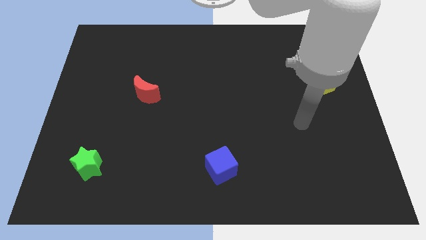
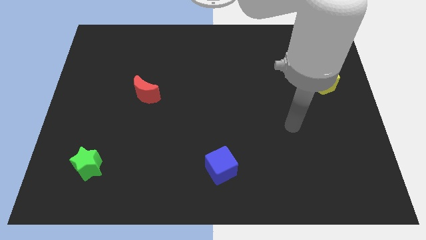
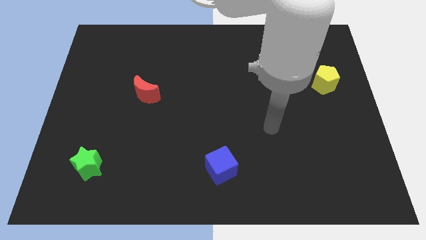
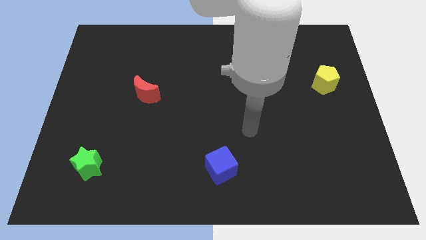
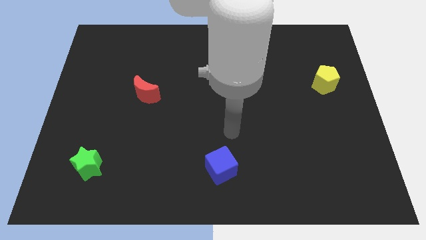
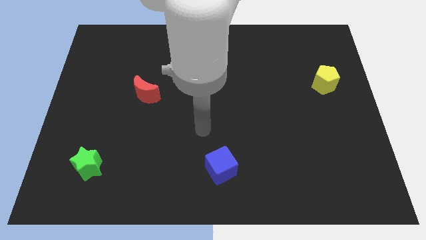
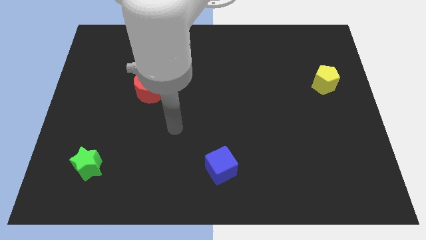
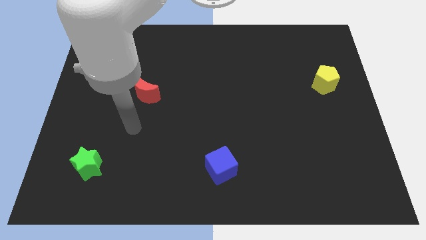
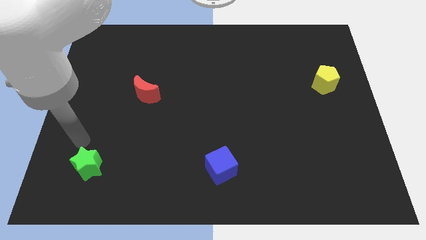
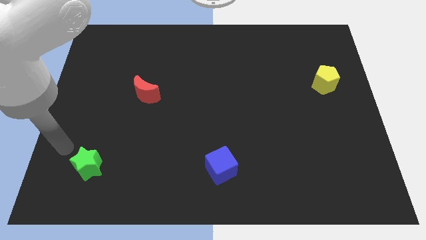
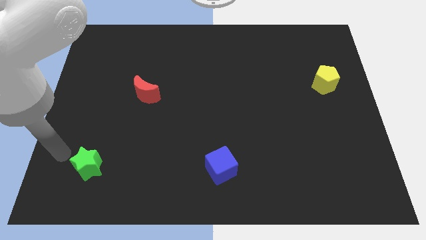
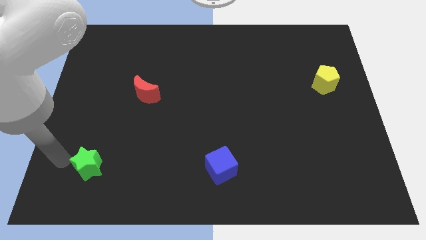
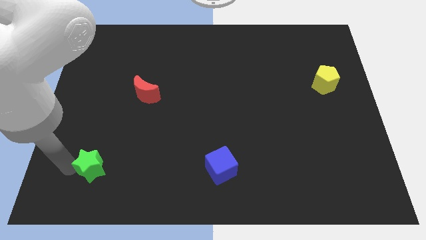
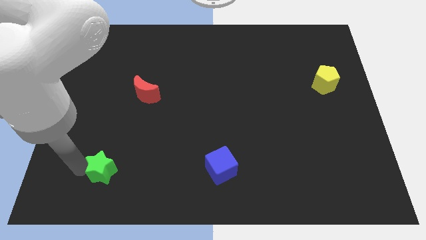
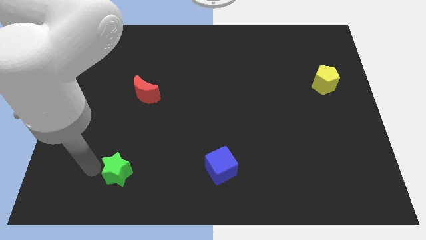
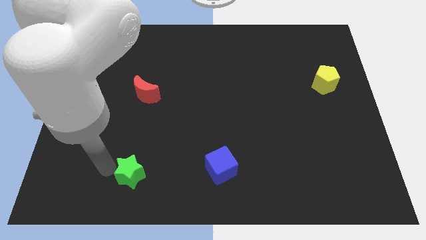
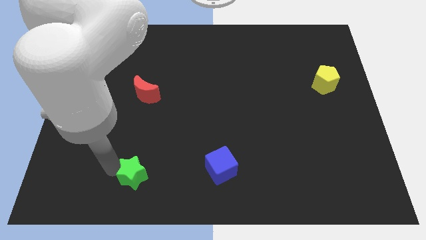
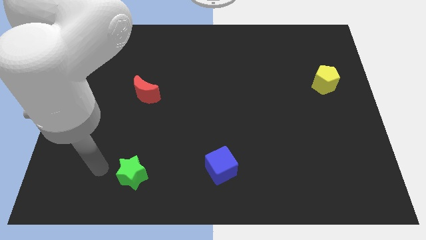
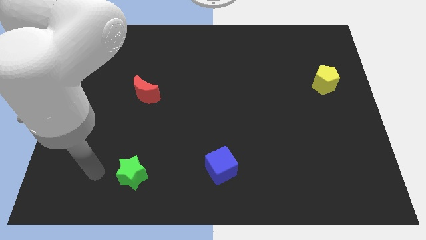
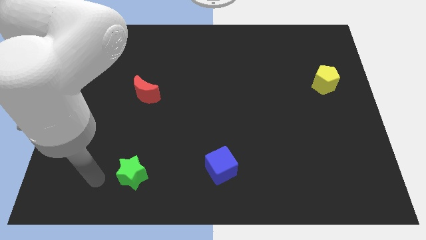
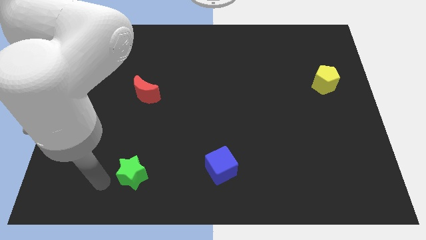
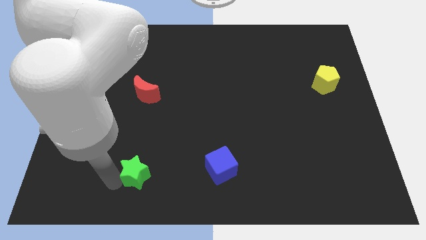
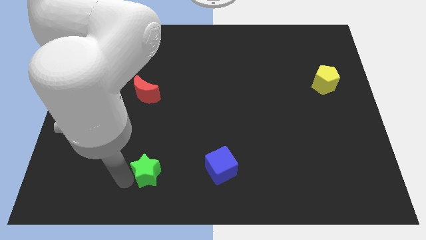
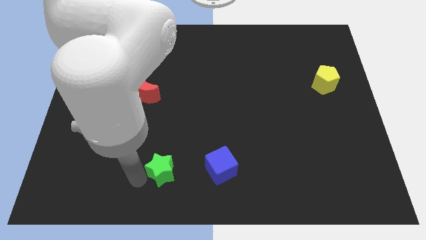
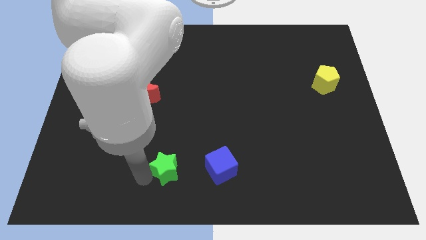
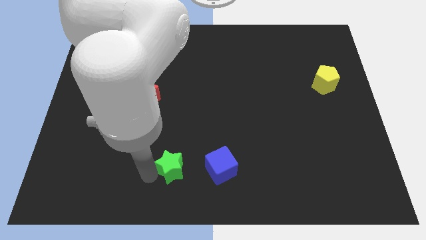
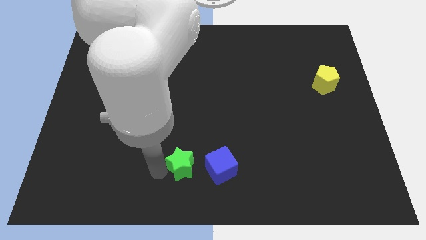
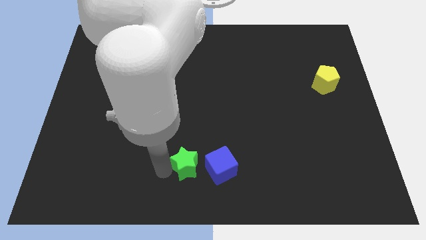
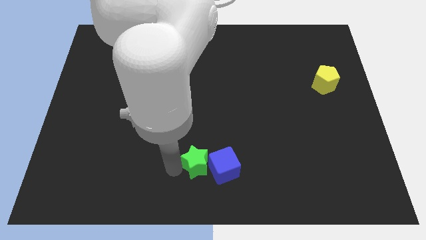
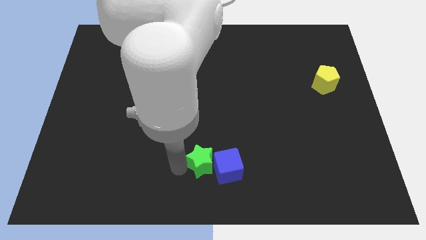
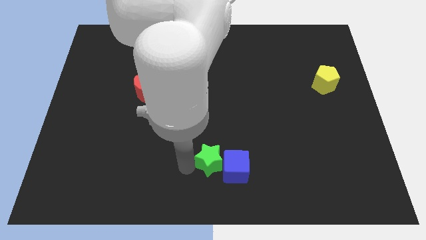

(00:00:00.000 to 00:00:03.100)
move the star towards the blue cube

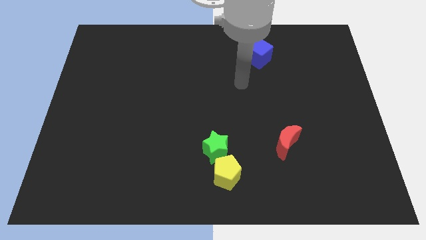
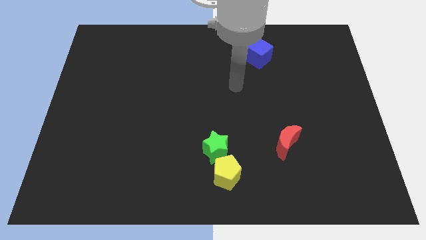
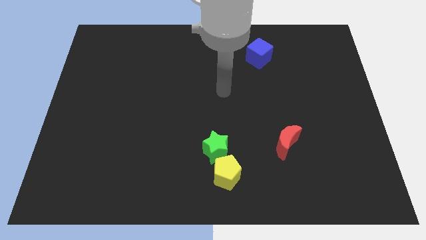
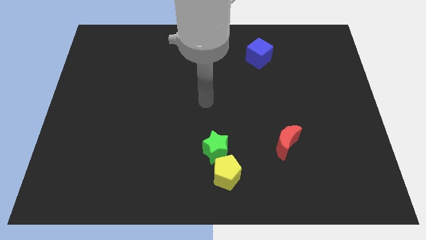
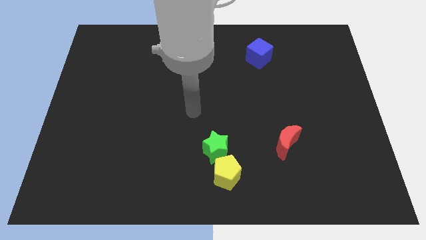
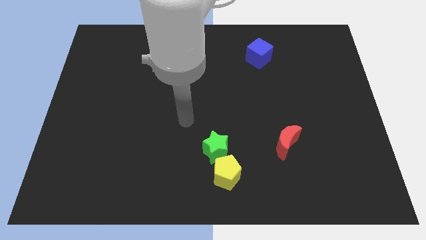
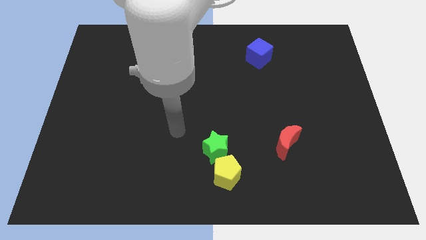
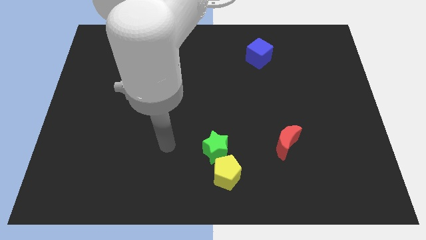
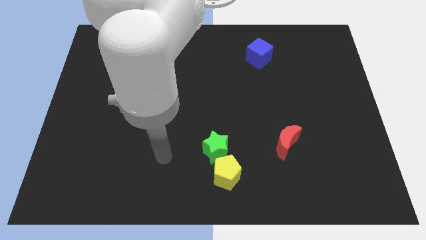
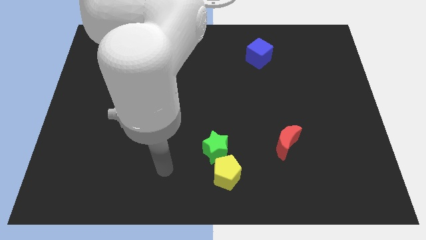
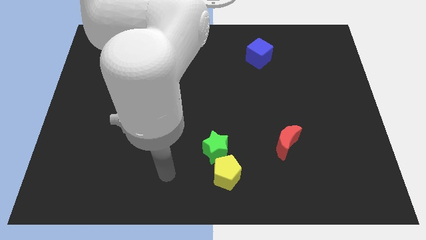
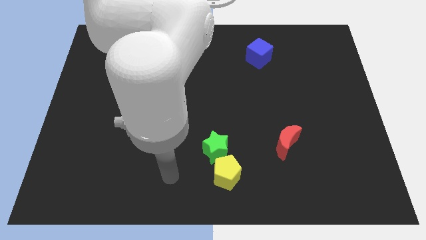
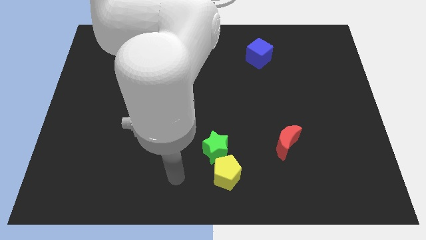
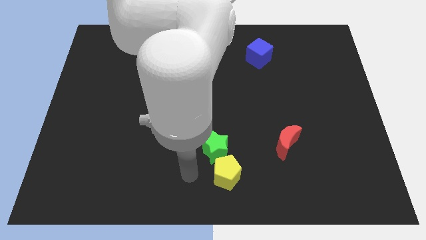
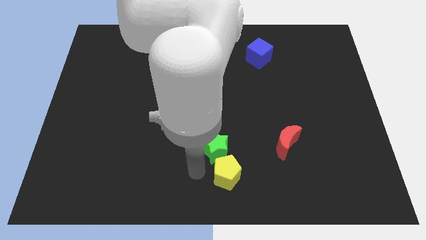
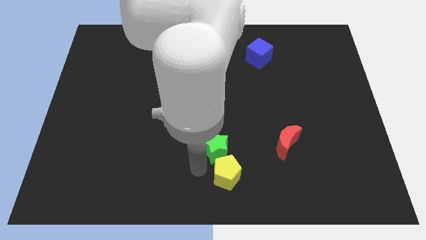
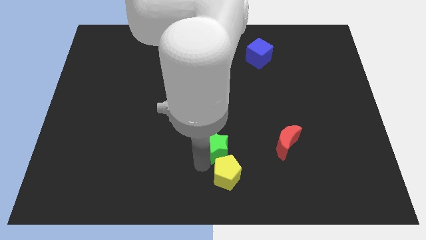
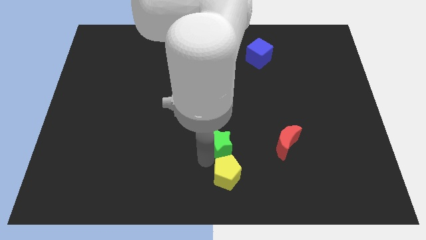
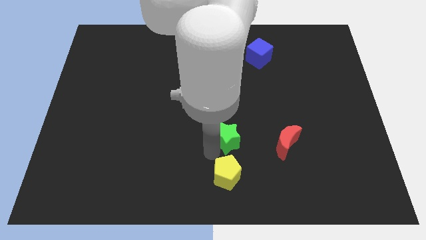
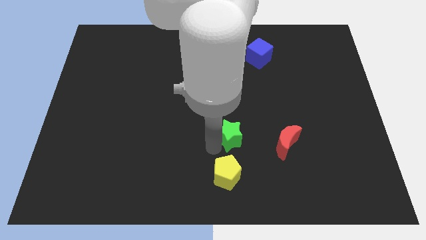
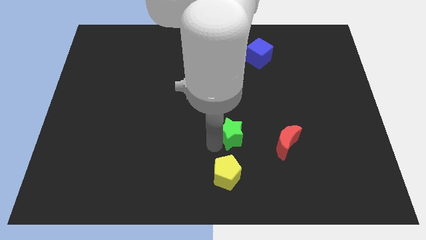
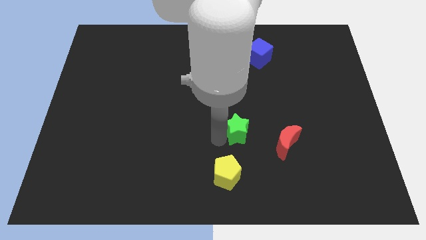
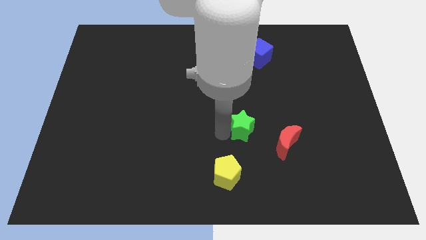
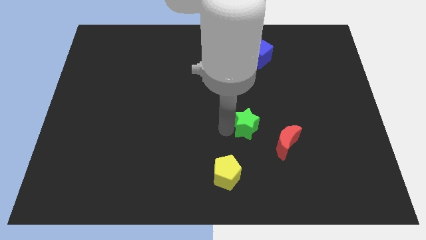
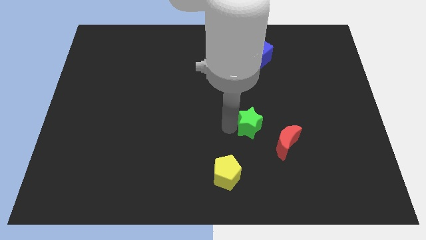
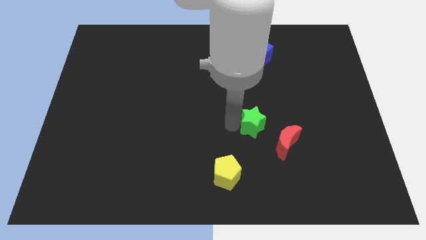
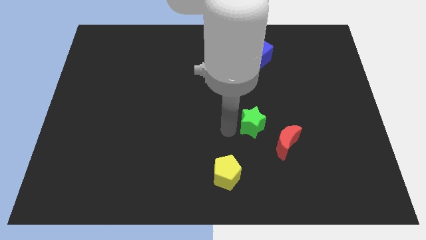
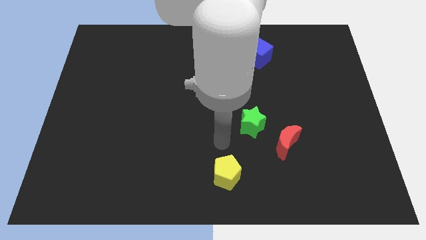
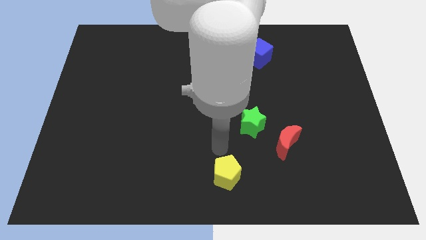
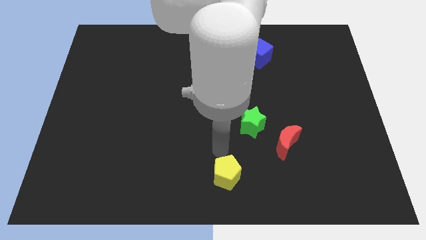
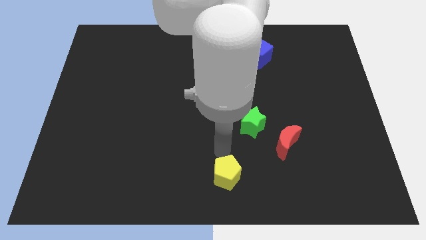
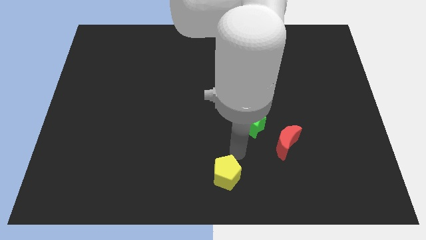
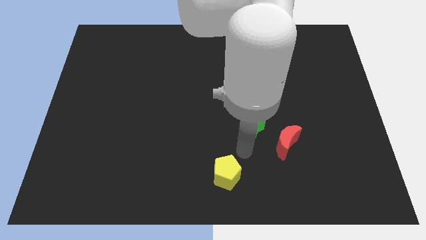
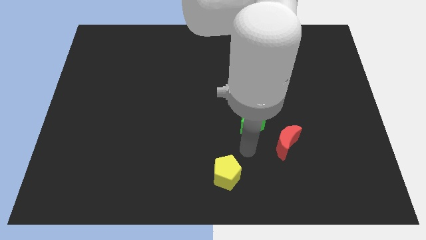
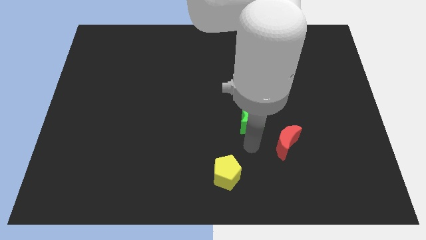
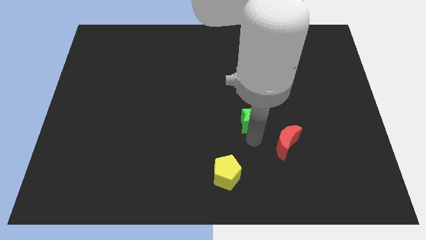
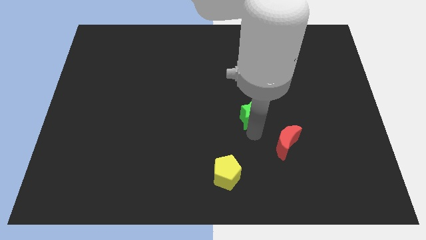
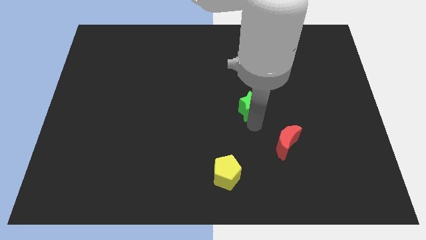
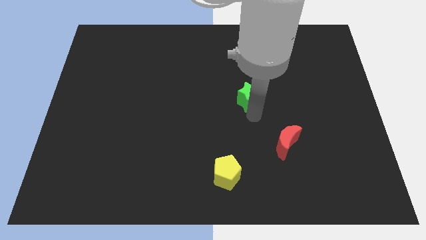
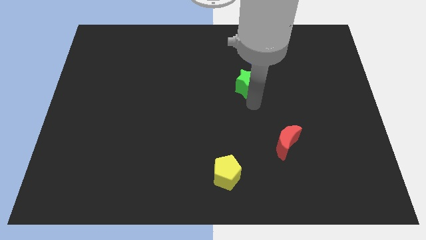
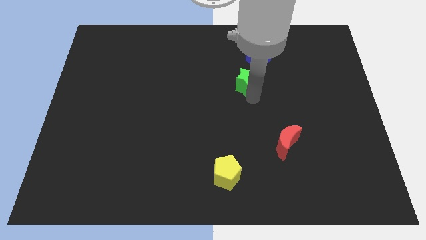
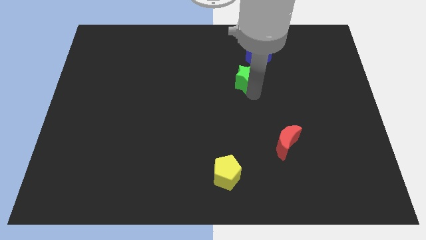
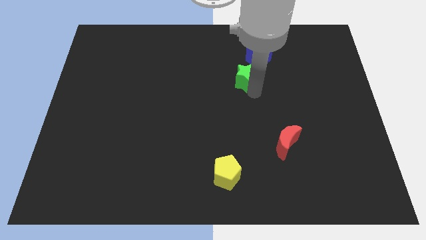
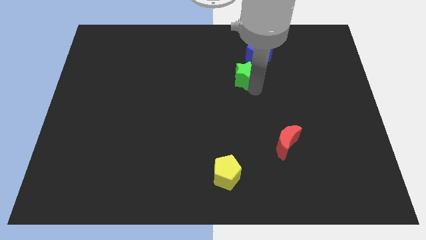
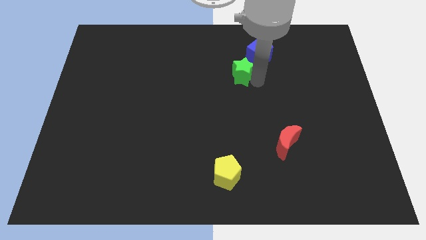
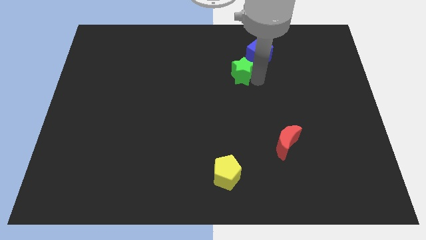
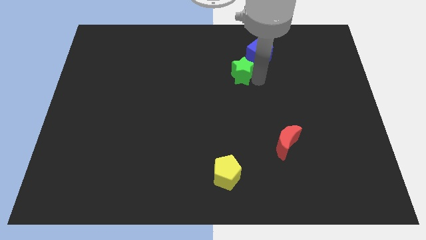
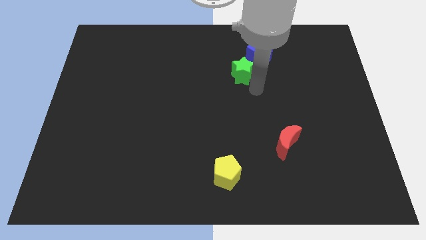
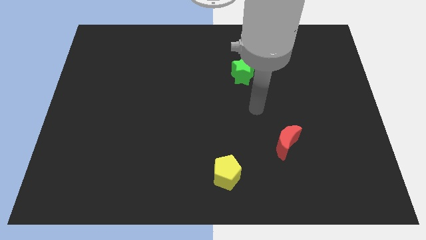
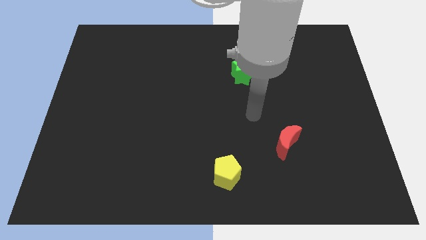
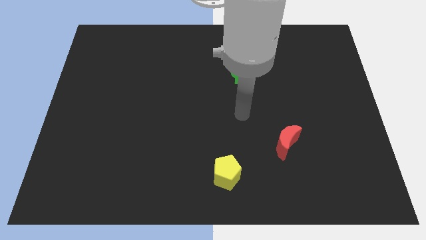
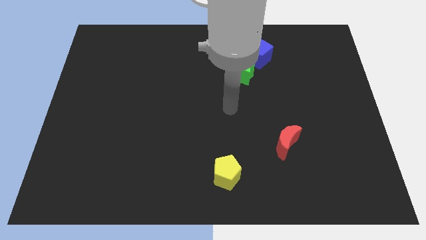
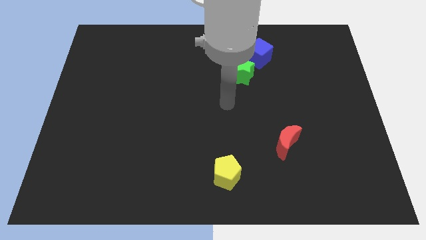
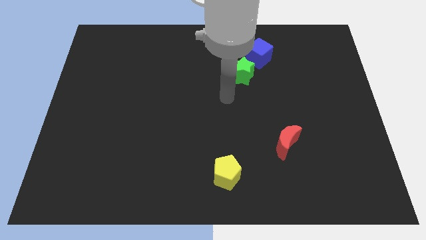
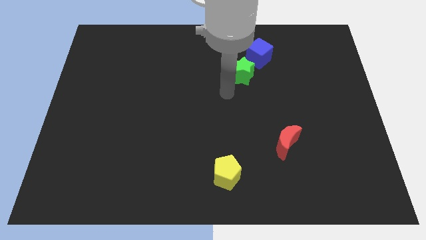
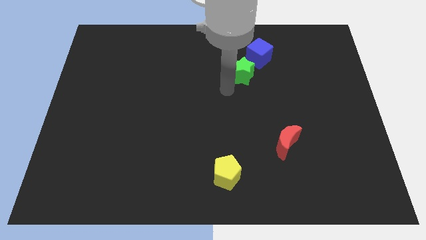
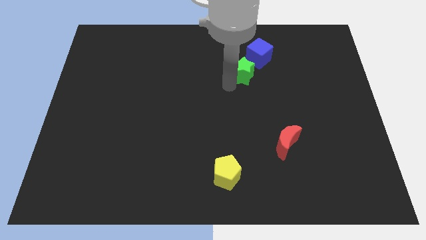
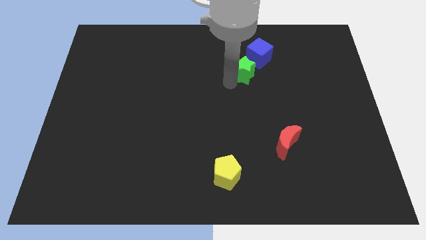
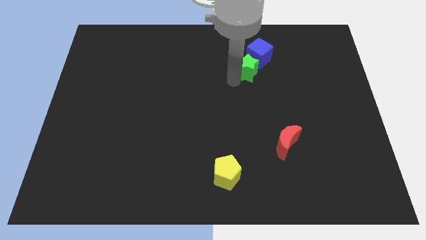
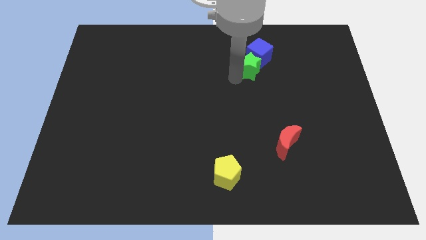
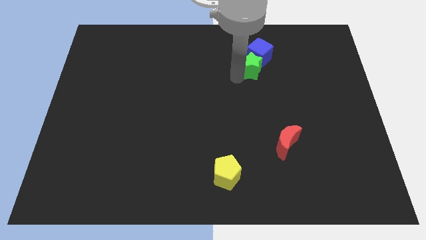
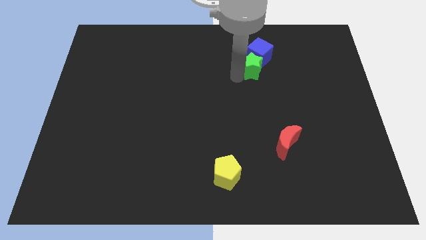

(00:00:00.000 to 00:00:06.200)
push the green star close to the cube
